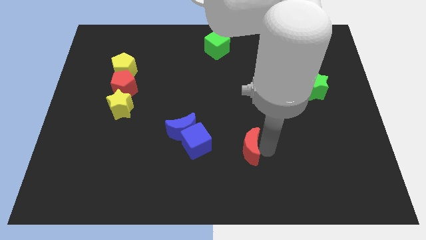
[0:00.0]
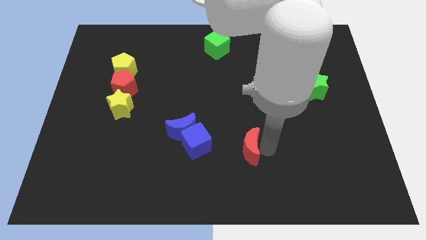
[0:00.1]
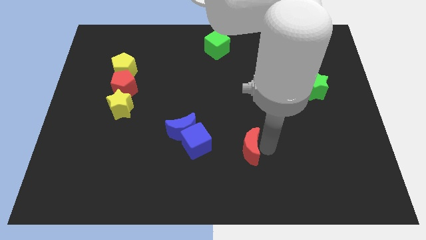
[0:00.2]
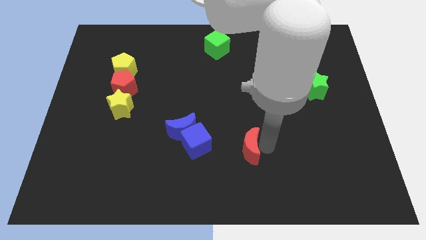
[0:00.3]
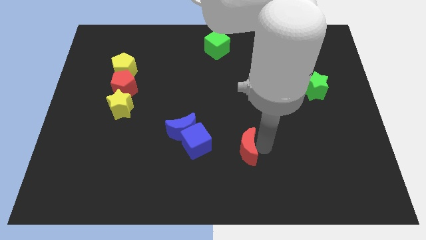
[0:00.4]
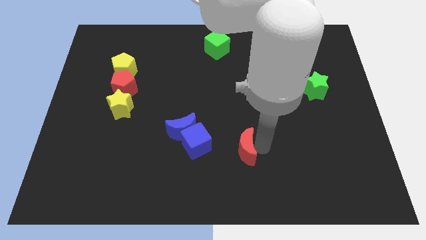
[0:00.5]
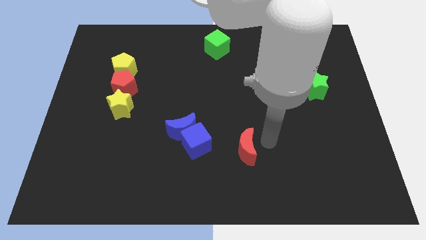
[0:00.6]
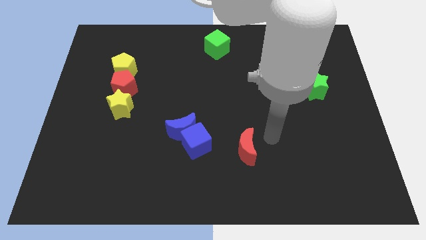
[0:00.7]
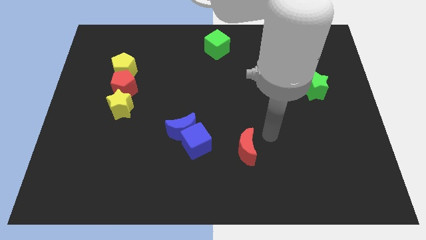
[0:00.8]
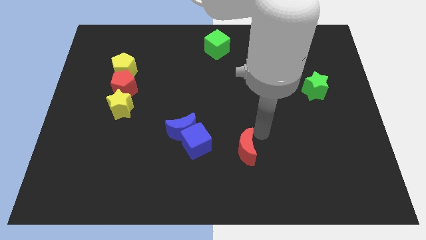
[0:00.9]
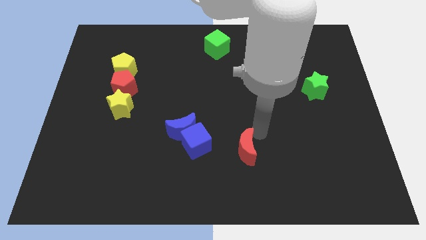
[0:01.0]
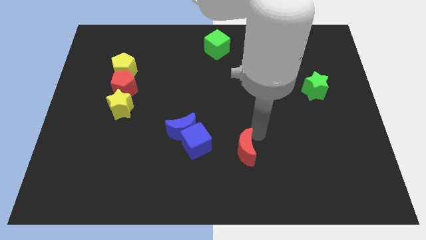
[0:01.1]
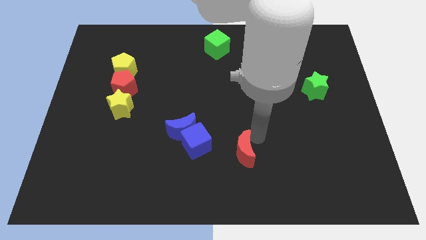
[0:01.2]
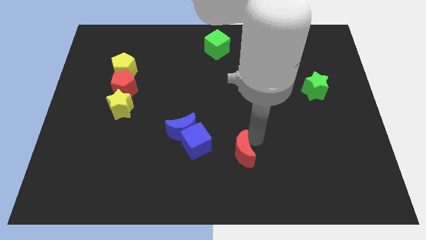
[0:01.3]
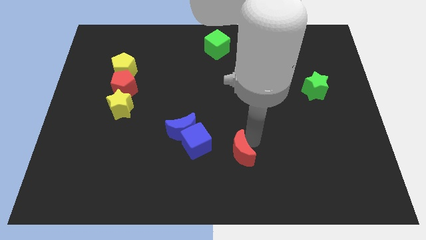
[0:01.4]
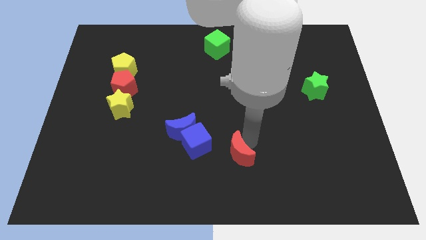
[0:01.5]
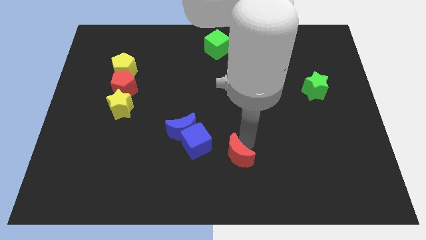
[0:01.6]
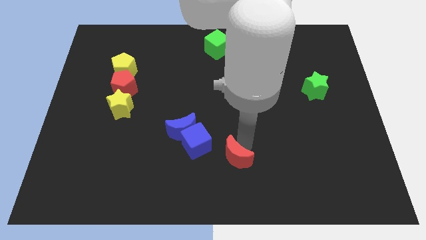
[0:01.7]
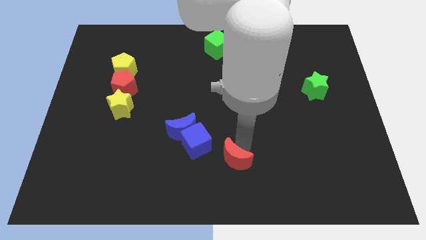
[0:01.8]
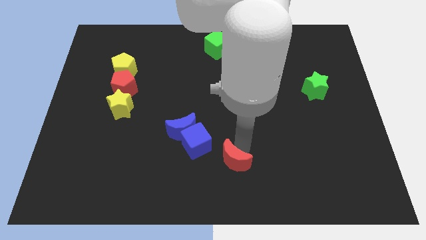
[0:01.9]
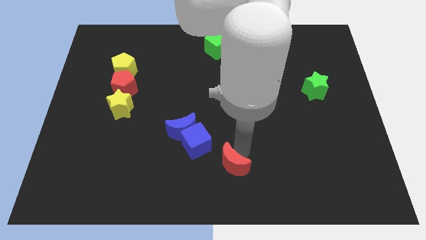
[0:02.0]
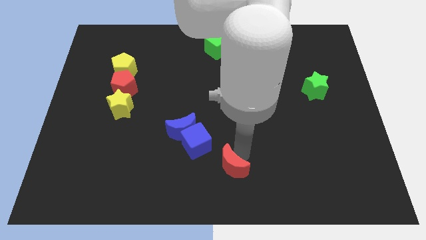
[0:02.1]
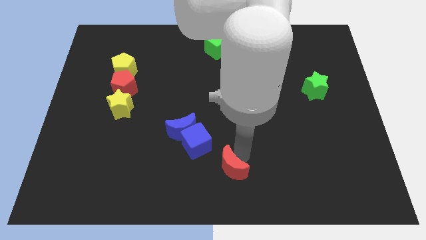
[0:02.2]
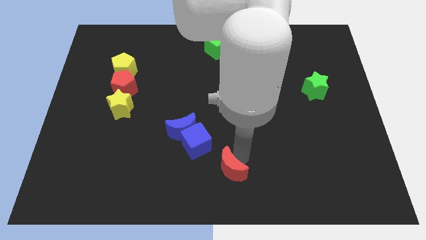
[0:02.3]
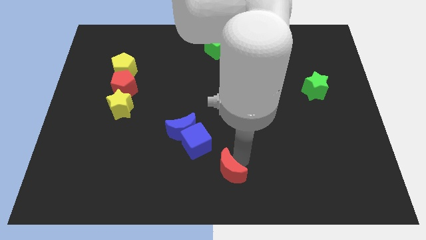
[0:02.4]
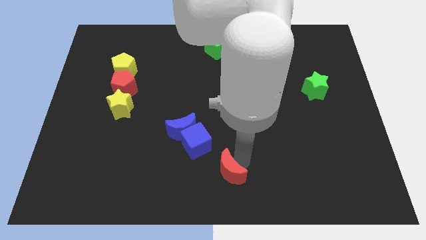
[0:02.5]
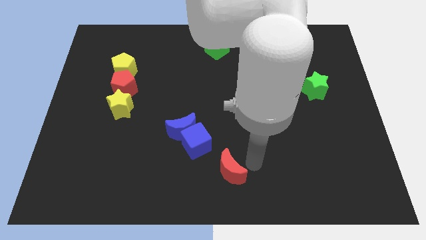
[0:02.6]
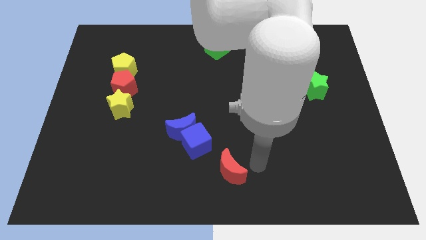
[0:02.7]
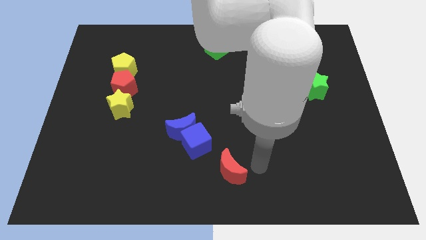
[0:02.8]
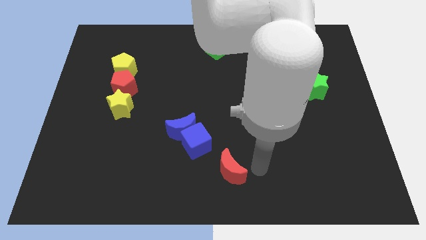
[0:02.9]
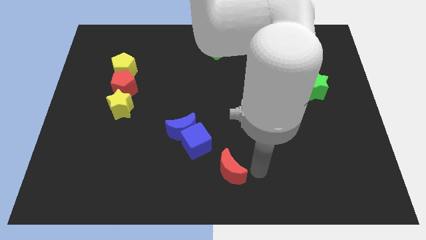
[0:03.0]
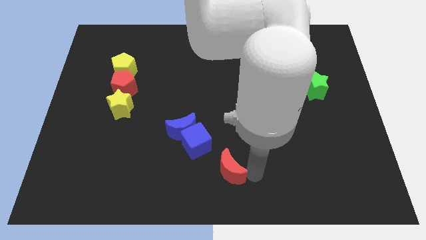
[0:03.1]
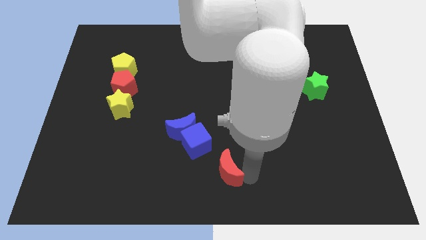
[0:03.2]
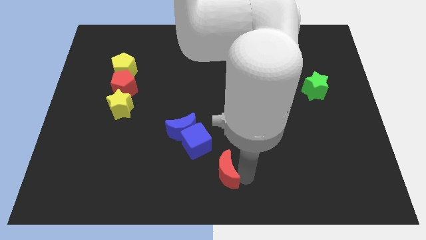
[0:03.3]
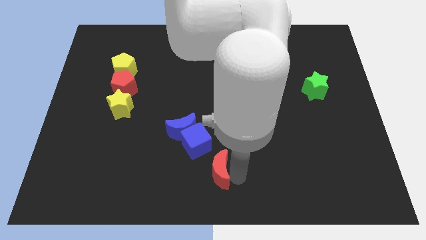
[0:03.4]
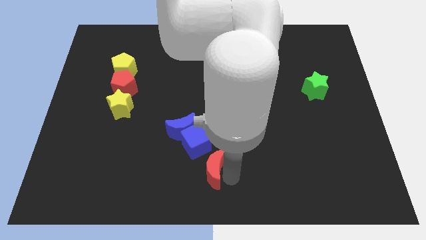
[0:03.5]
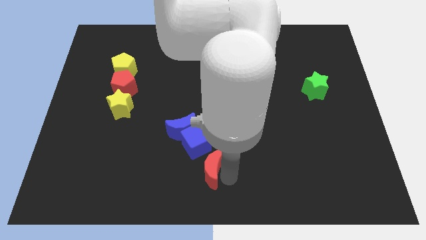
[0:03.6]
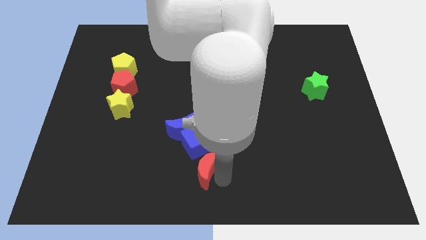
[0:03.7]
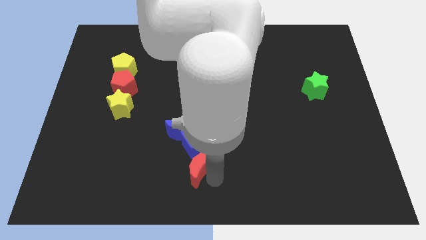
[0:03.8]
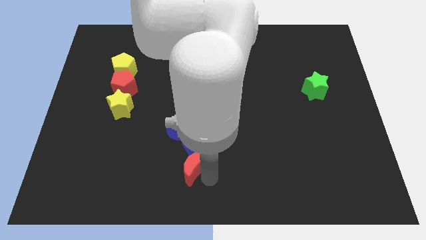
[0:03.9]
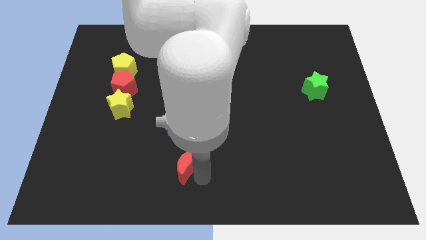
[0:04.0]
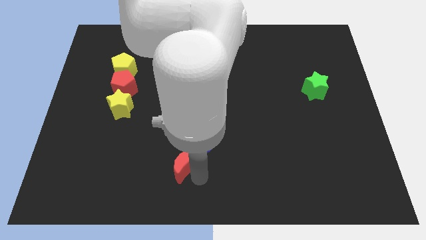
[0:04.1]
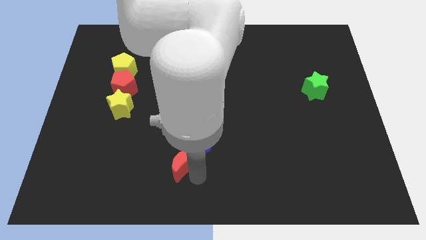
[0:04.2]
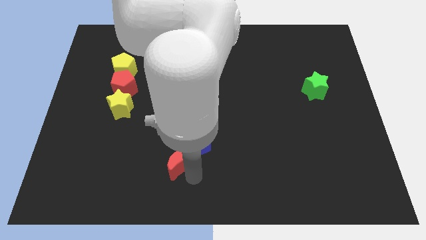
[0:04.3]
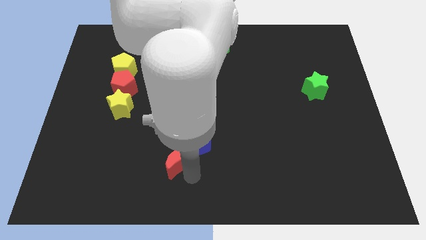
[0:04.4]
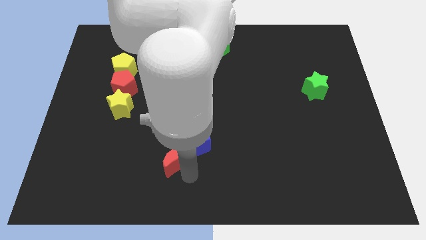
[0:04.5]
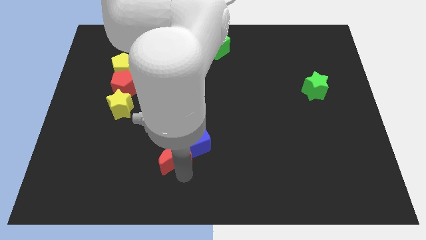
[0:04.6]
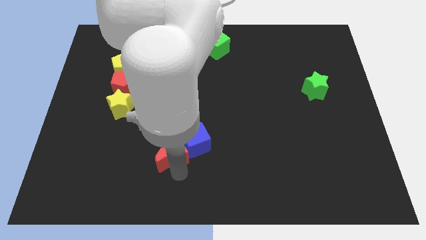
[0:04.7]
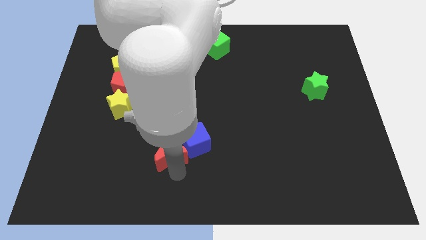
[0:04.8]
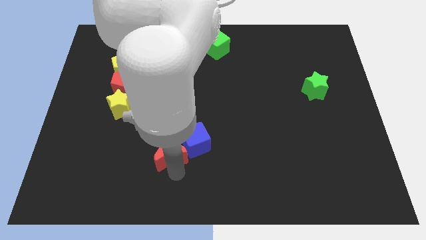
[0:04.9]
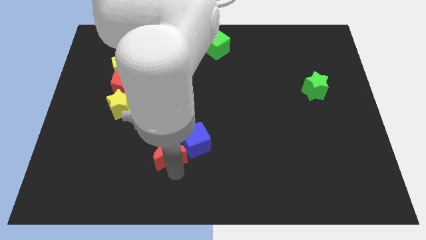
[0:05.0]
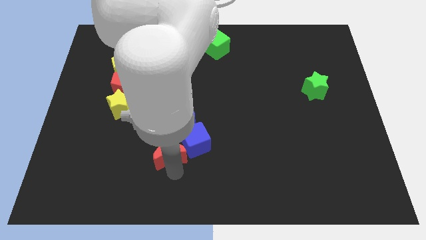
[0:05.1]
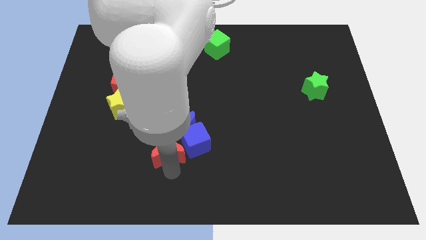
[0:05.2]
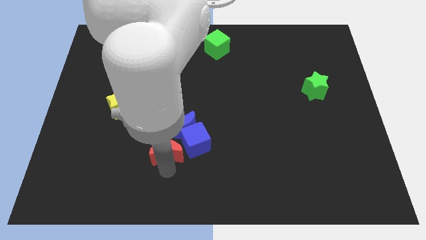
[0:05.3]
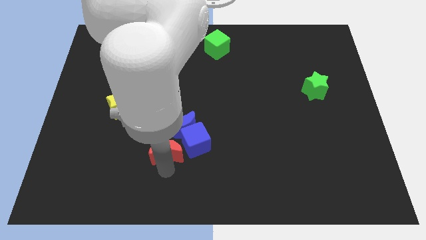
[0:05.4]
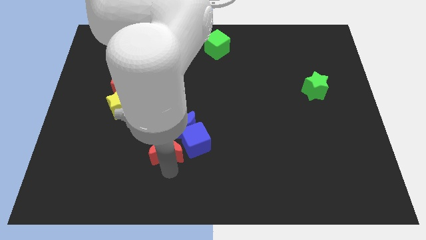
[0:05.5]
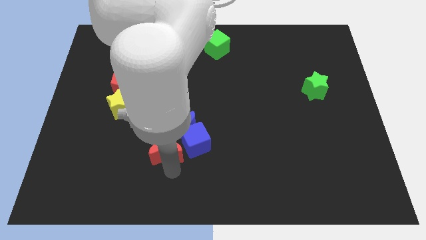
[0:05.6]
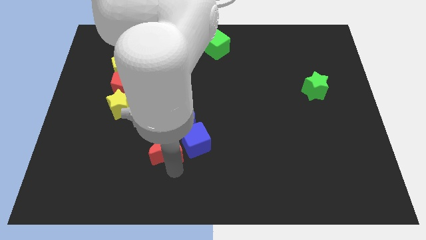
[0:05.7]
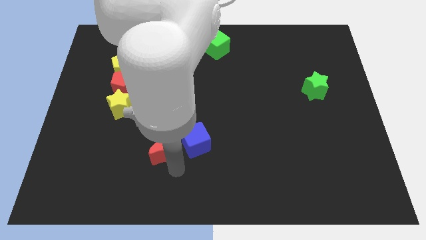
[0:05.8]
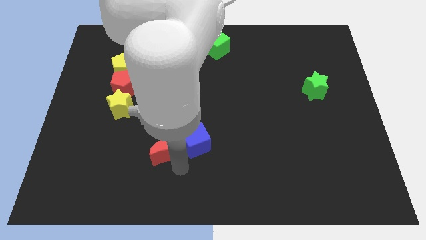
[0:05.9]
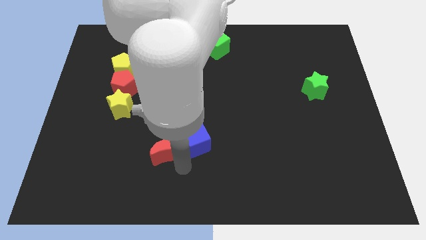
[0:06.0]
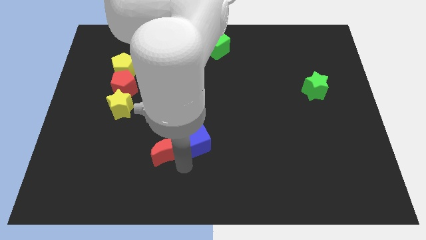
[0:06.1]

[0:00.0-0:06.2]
move red moon into blue cube

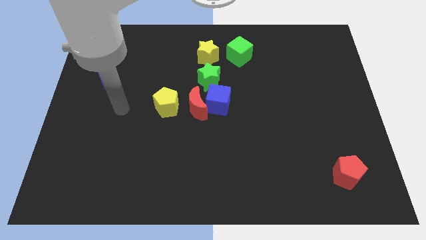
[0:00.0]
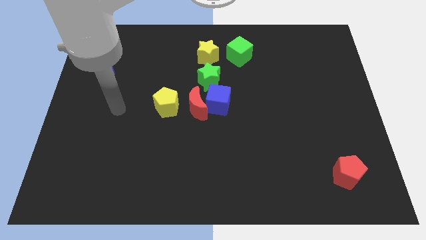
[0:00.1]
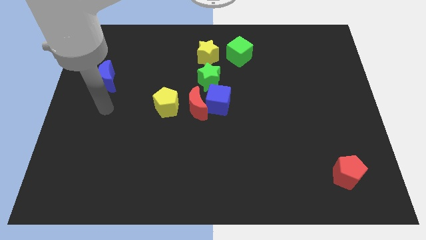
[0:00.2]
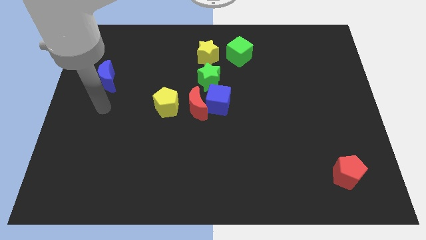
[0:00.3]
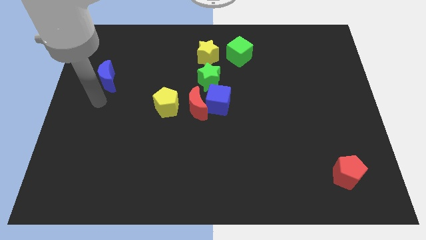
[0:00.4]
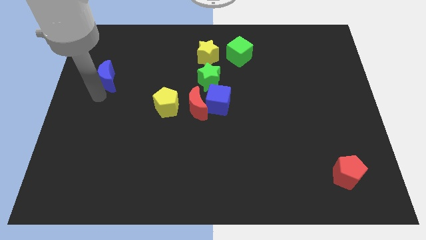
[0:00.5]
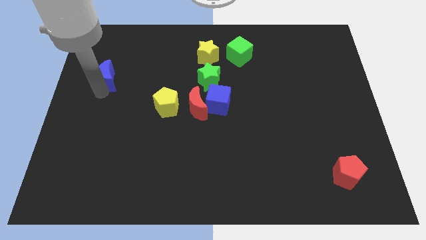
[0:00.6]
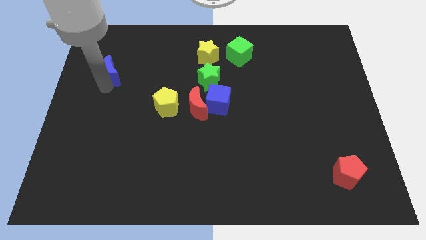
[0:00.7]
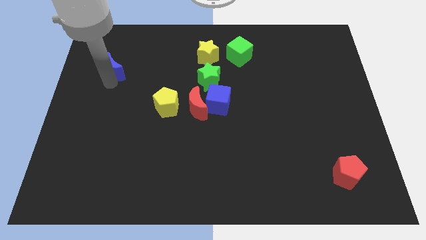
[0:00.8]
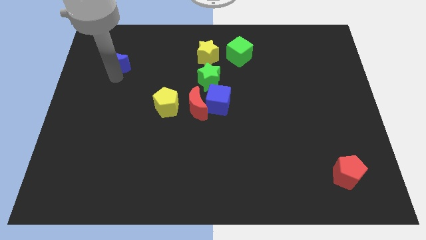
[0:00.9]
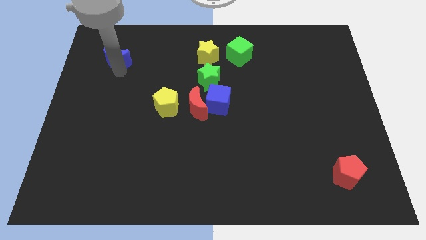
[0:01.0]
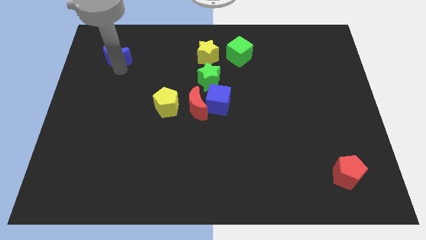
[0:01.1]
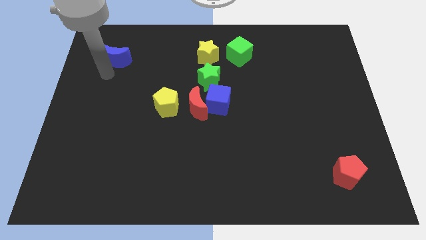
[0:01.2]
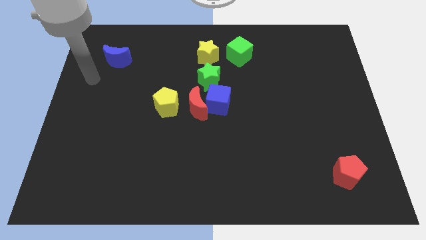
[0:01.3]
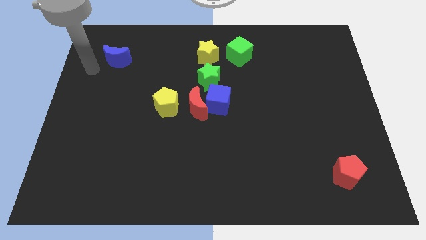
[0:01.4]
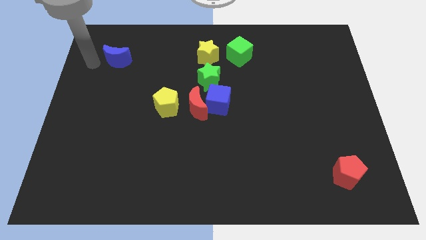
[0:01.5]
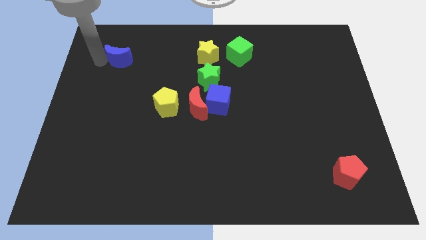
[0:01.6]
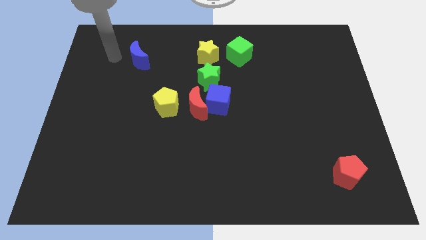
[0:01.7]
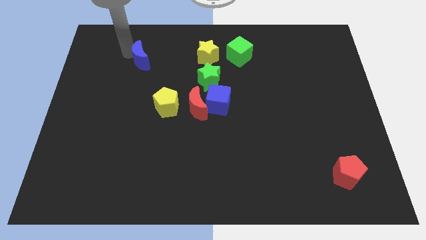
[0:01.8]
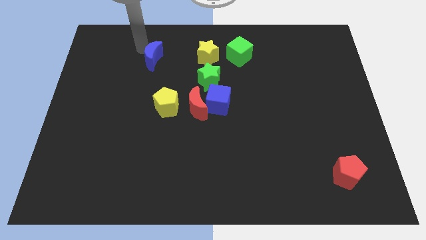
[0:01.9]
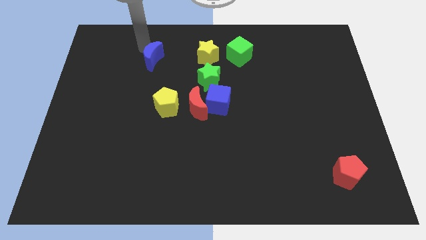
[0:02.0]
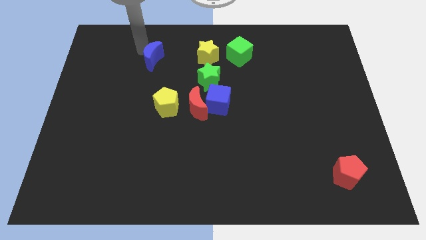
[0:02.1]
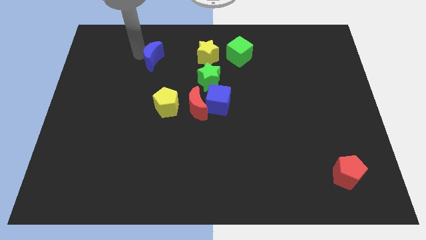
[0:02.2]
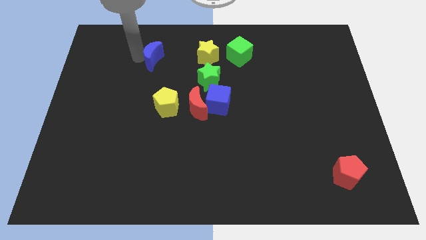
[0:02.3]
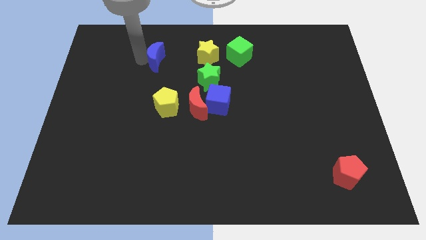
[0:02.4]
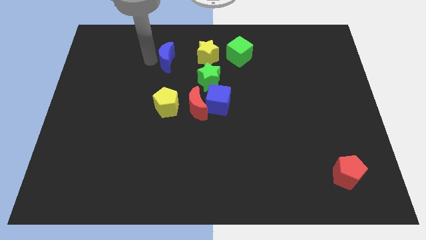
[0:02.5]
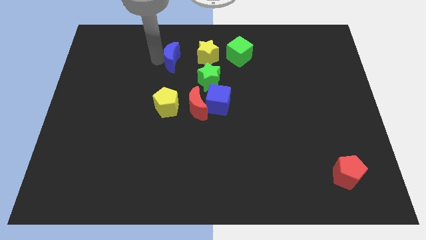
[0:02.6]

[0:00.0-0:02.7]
place blue crescent to the left of yellow star

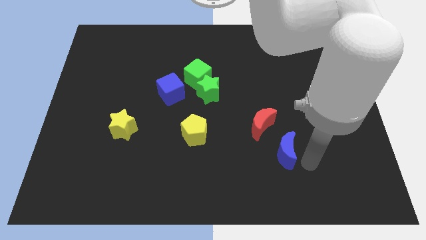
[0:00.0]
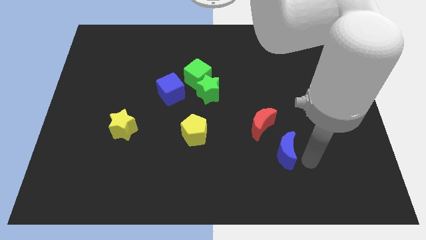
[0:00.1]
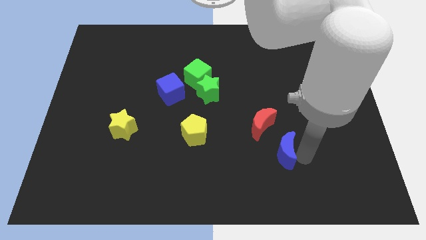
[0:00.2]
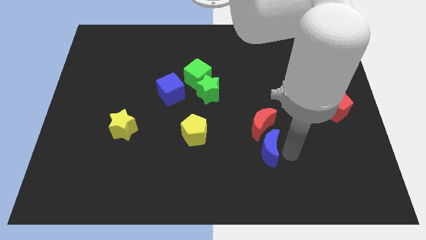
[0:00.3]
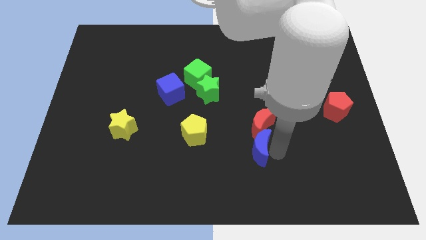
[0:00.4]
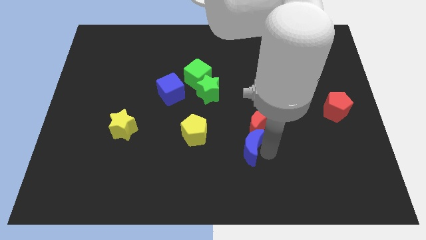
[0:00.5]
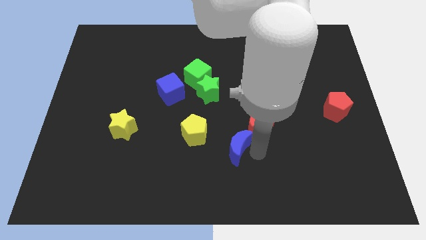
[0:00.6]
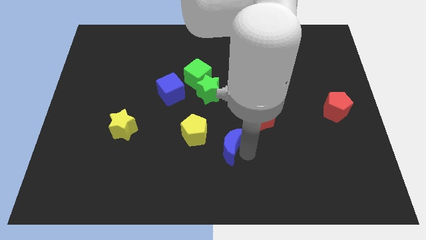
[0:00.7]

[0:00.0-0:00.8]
place the blue crescent below the red crescent
